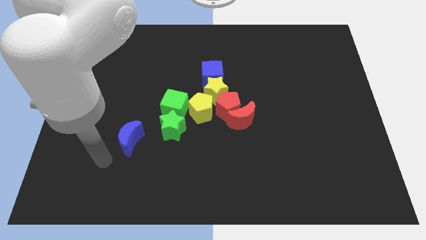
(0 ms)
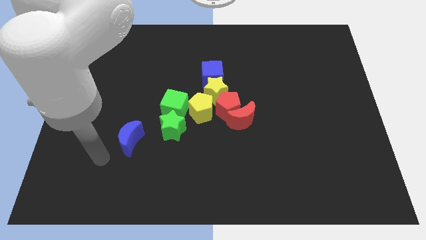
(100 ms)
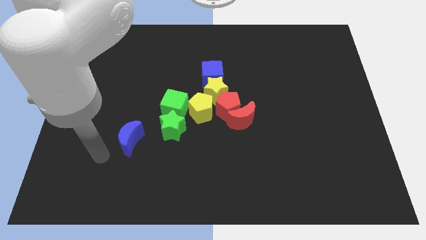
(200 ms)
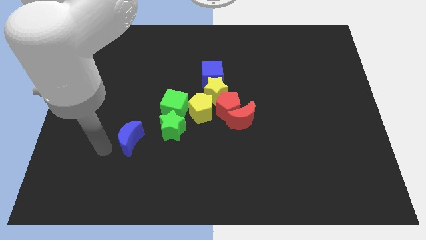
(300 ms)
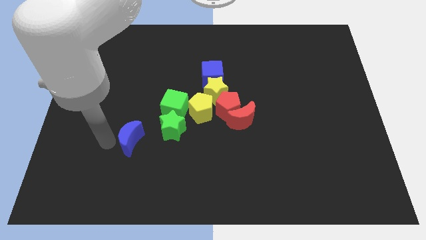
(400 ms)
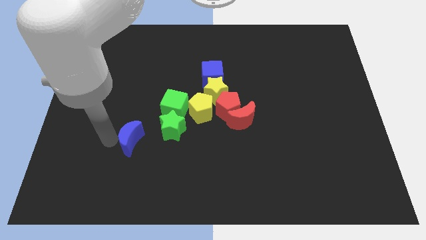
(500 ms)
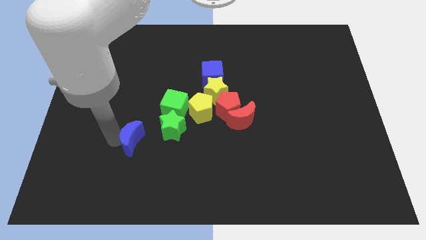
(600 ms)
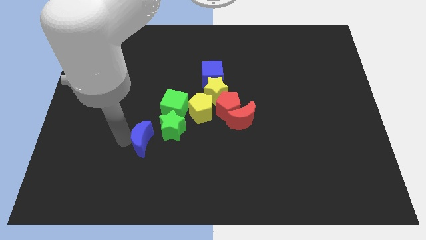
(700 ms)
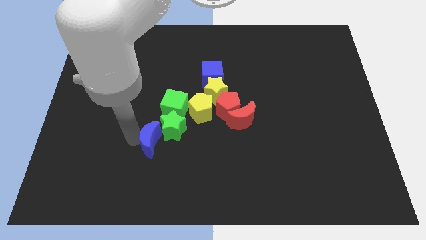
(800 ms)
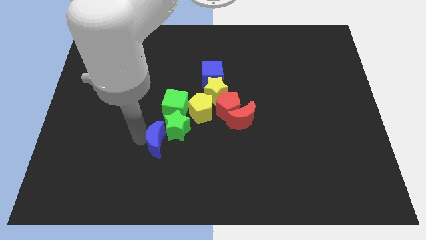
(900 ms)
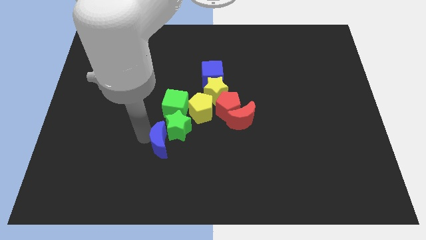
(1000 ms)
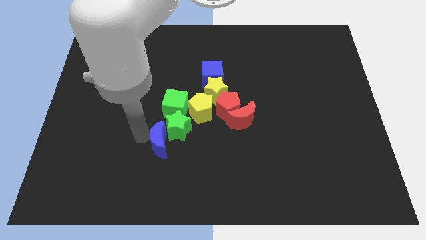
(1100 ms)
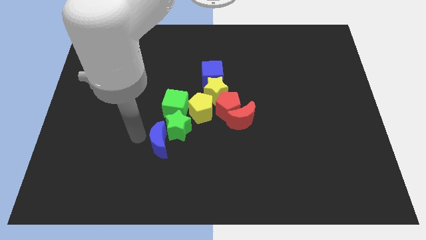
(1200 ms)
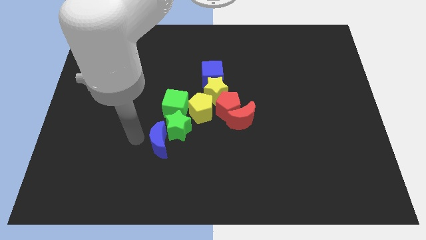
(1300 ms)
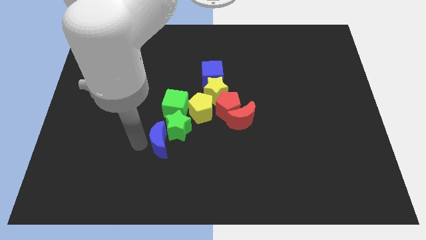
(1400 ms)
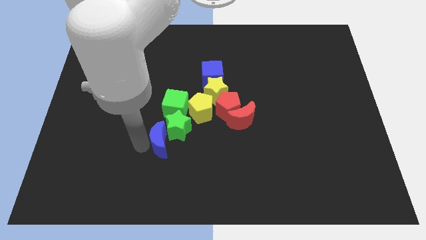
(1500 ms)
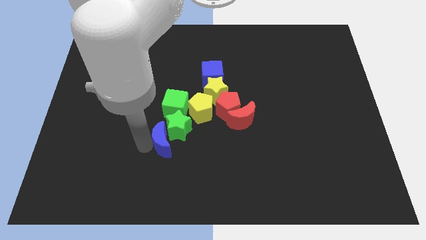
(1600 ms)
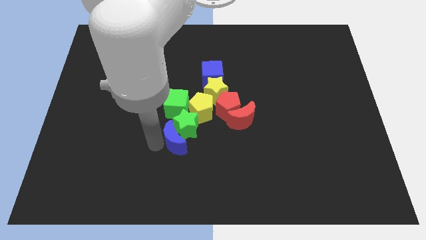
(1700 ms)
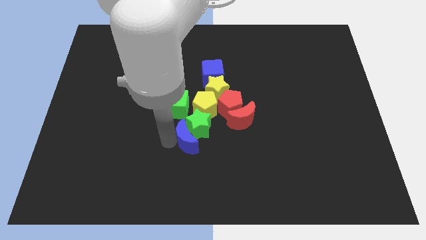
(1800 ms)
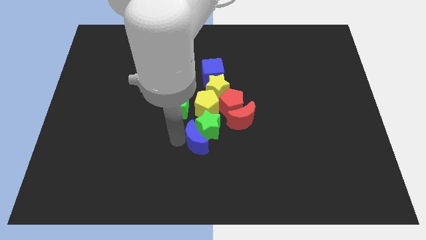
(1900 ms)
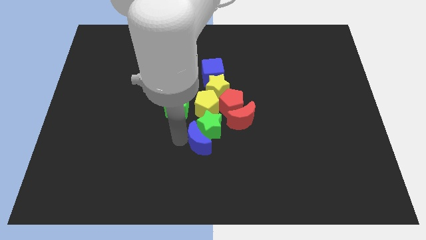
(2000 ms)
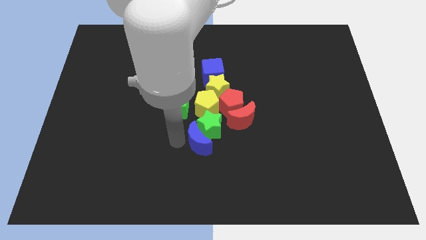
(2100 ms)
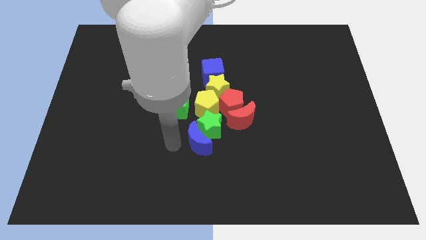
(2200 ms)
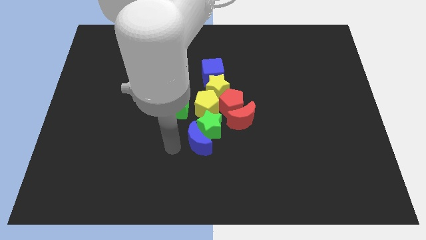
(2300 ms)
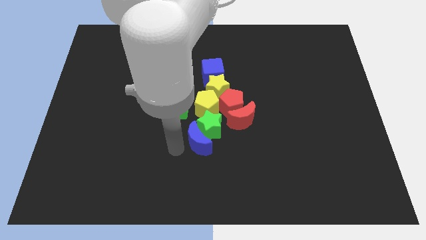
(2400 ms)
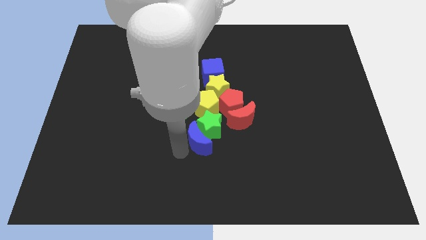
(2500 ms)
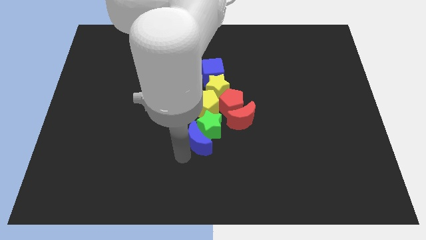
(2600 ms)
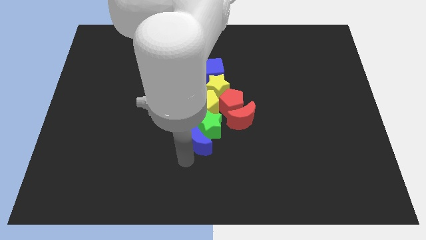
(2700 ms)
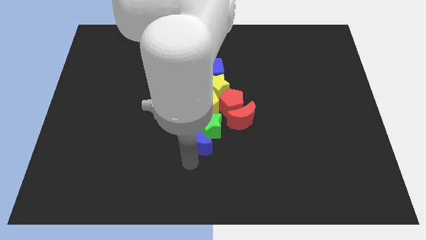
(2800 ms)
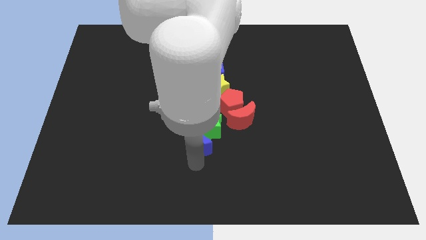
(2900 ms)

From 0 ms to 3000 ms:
push blue crescent along with green star

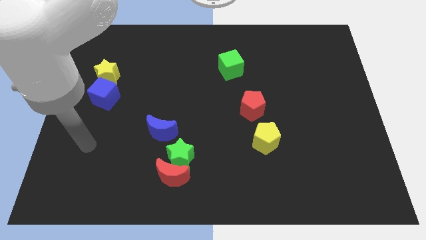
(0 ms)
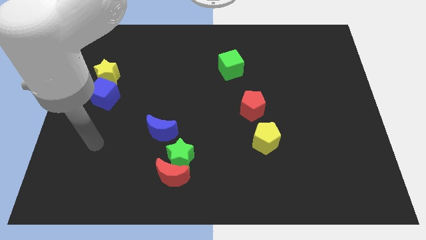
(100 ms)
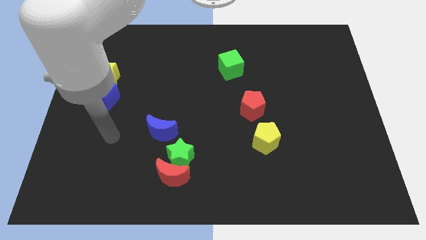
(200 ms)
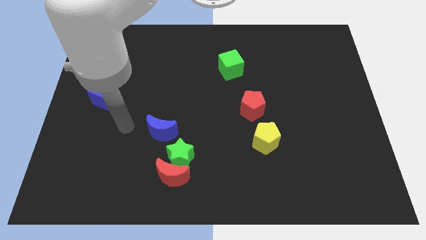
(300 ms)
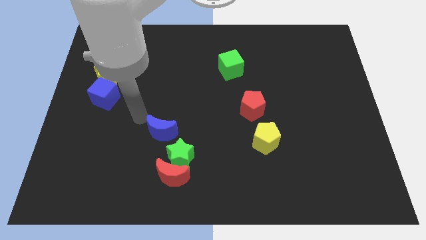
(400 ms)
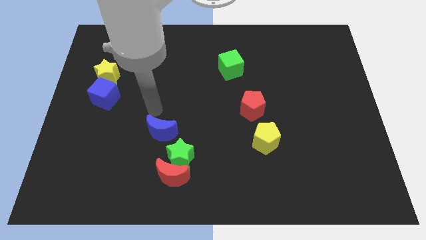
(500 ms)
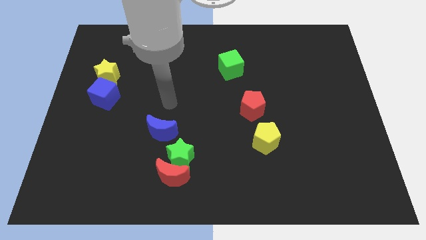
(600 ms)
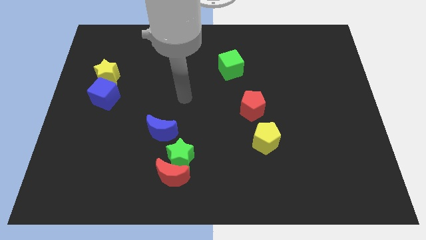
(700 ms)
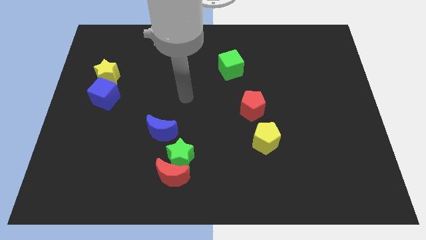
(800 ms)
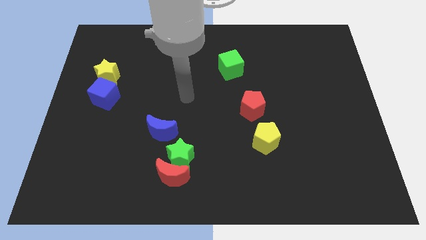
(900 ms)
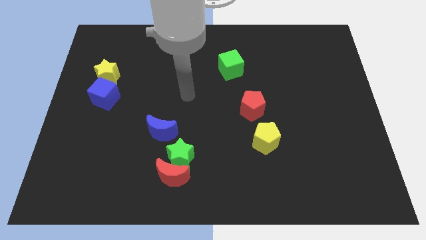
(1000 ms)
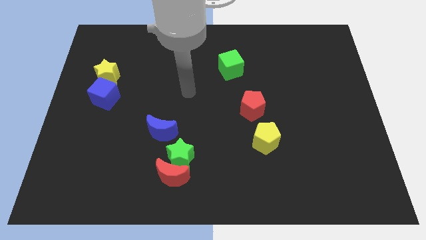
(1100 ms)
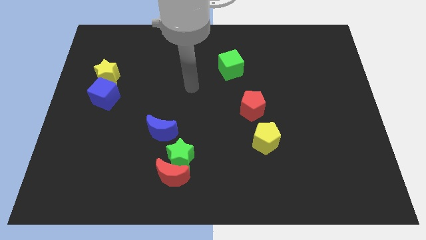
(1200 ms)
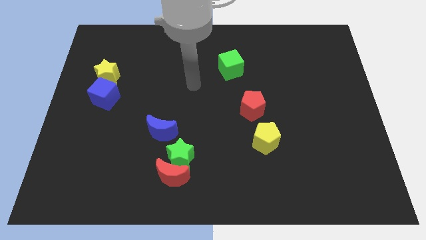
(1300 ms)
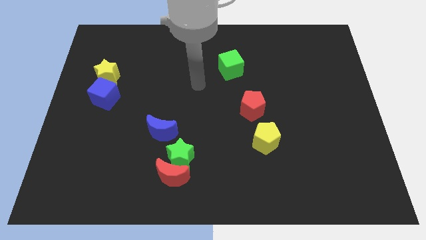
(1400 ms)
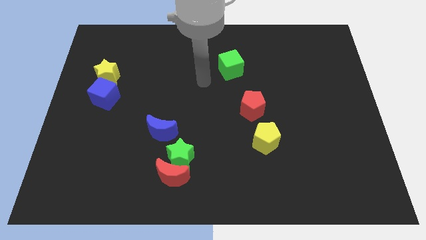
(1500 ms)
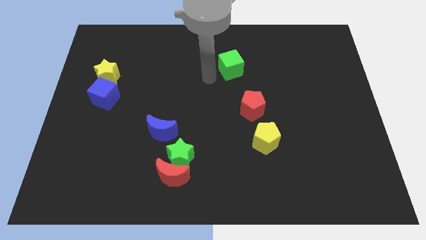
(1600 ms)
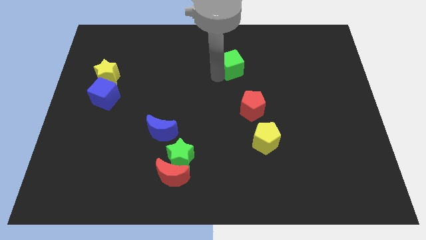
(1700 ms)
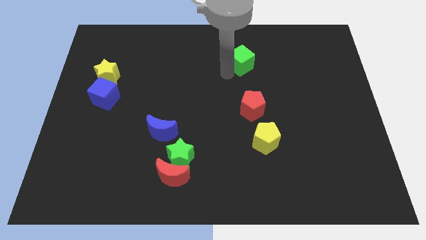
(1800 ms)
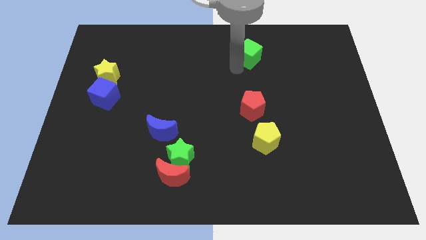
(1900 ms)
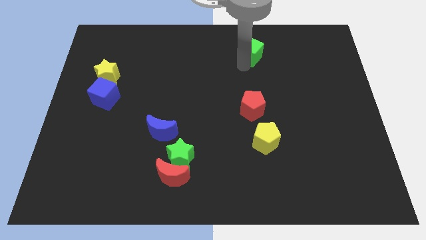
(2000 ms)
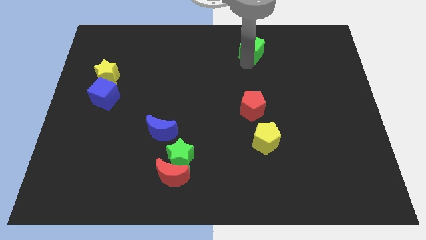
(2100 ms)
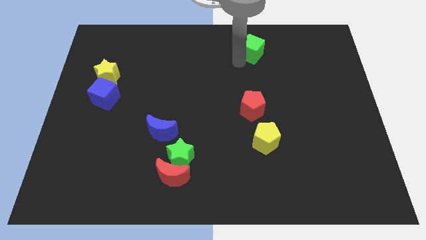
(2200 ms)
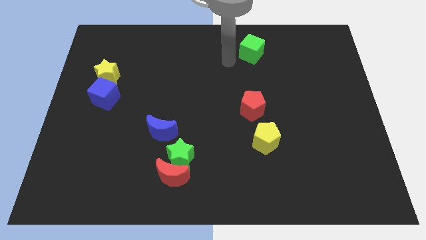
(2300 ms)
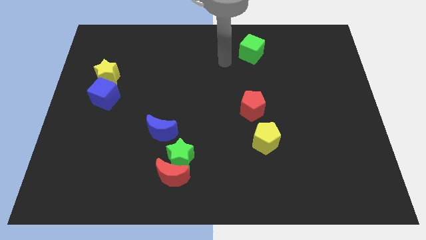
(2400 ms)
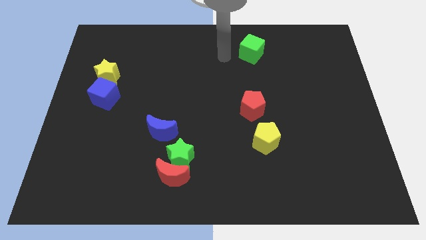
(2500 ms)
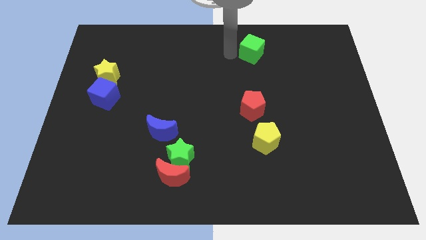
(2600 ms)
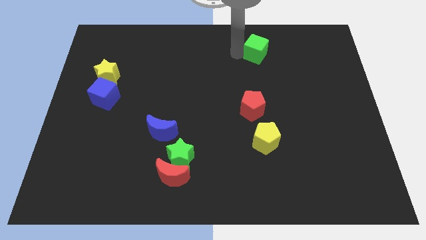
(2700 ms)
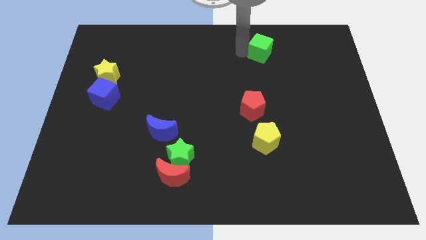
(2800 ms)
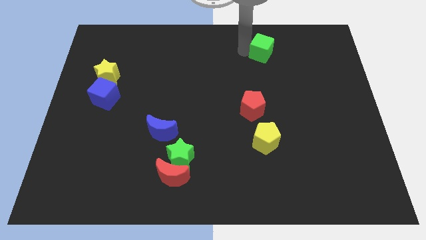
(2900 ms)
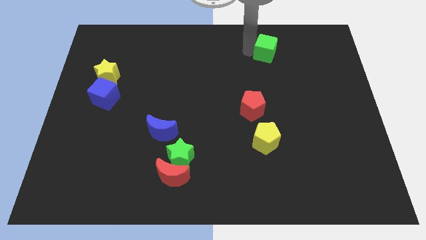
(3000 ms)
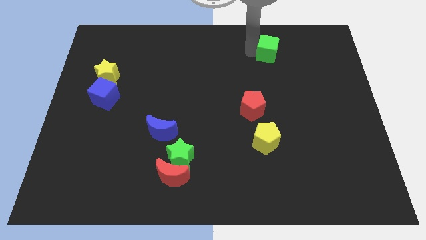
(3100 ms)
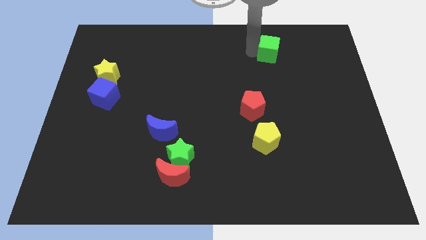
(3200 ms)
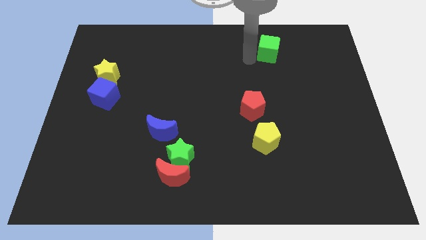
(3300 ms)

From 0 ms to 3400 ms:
push the green cube to the top right of the red pentagon

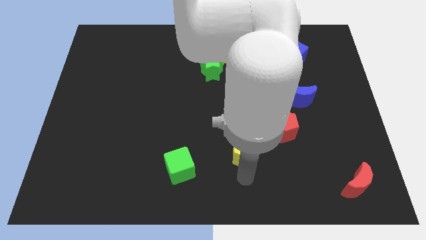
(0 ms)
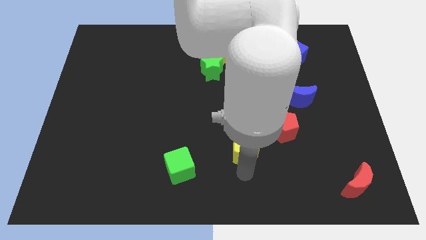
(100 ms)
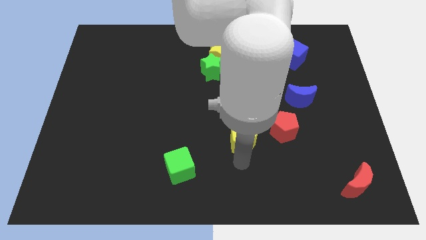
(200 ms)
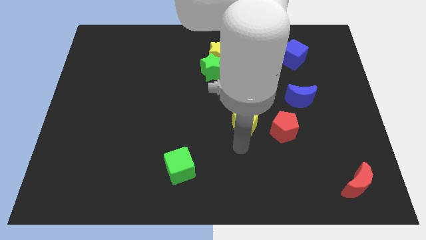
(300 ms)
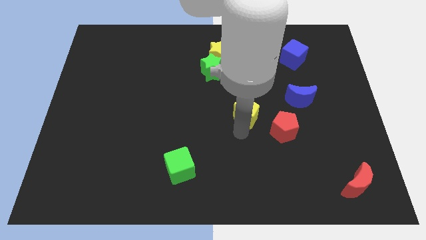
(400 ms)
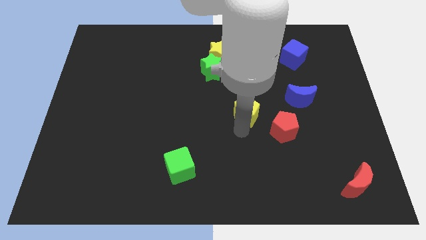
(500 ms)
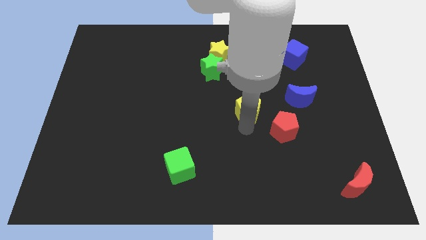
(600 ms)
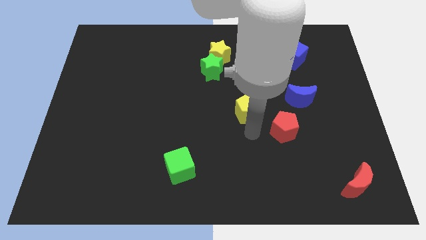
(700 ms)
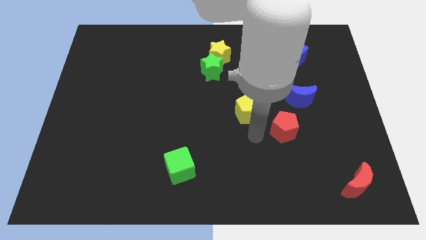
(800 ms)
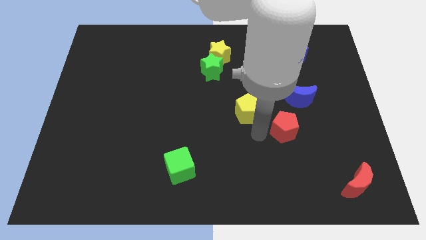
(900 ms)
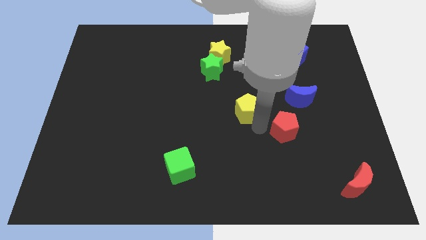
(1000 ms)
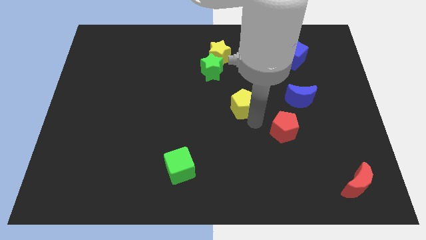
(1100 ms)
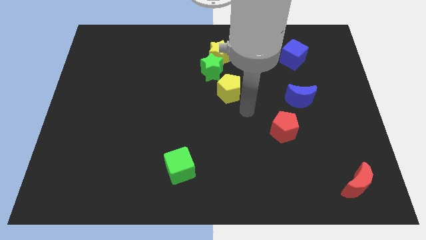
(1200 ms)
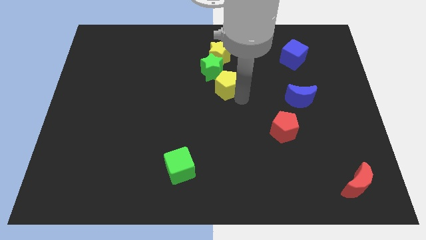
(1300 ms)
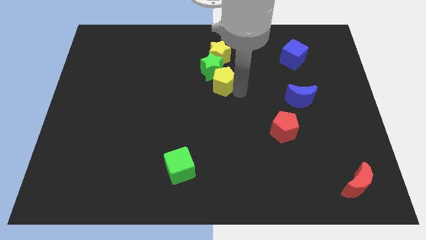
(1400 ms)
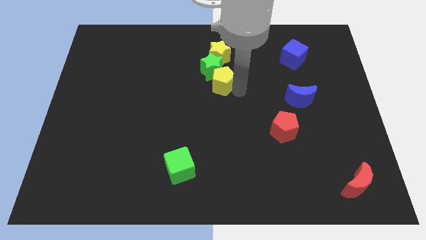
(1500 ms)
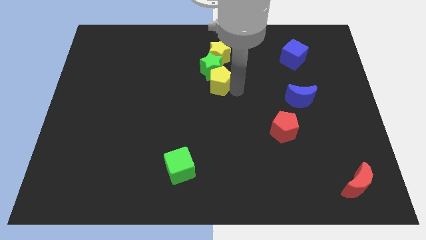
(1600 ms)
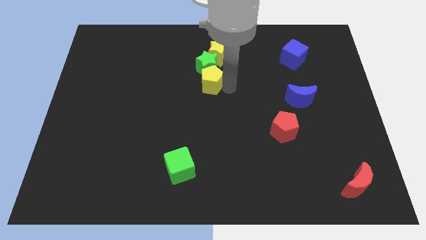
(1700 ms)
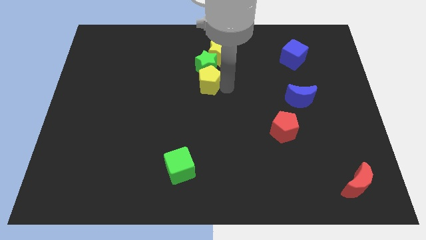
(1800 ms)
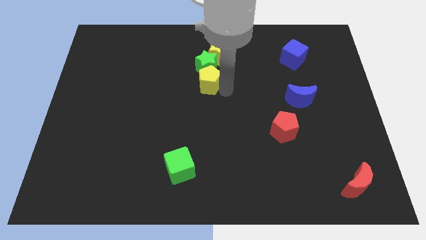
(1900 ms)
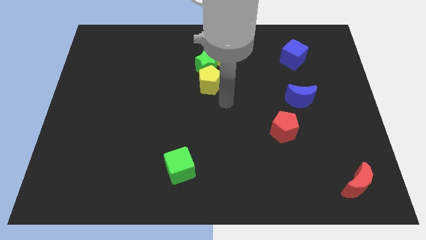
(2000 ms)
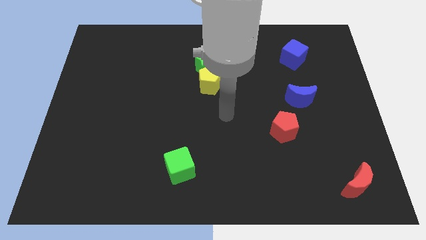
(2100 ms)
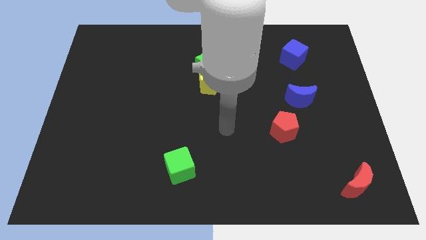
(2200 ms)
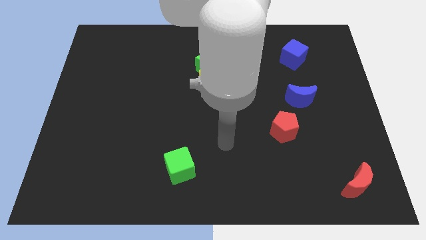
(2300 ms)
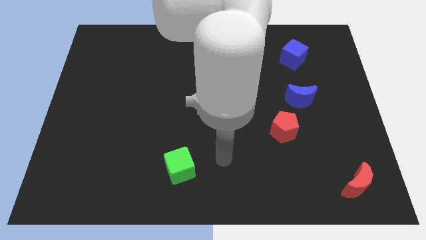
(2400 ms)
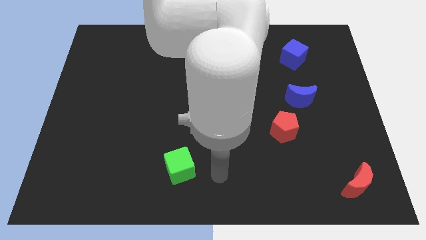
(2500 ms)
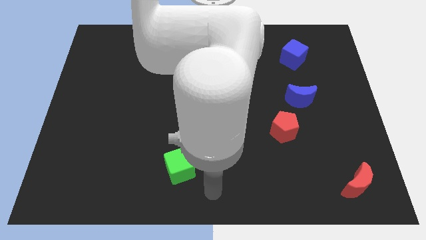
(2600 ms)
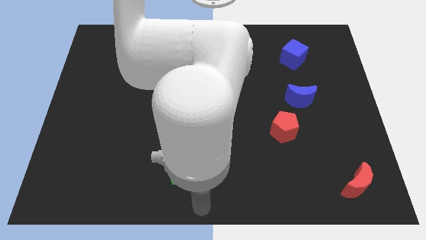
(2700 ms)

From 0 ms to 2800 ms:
place the yellow pentagon below the green star
